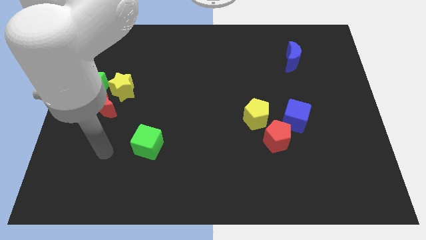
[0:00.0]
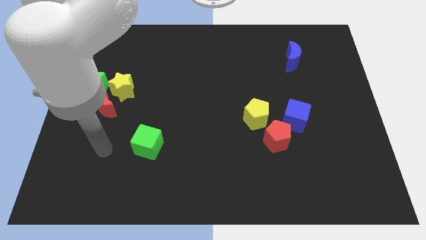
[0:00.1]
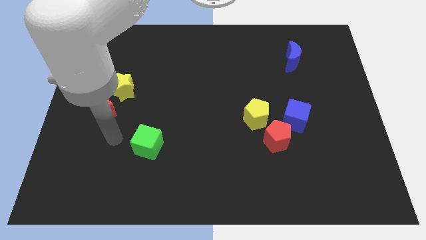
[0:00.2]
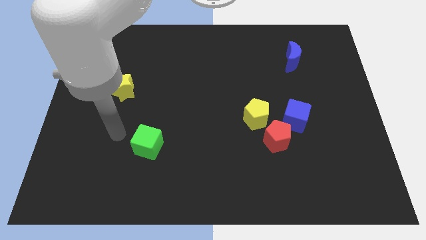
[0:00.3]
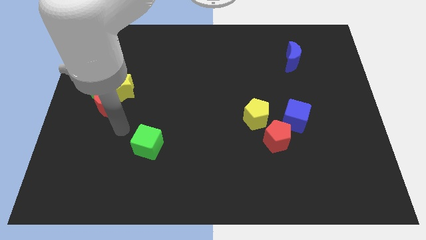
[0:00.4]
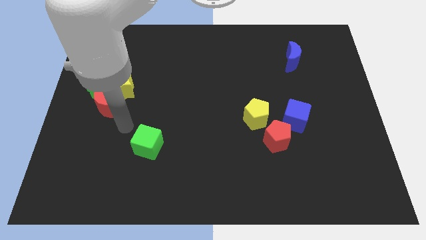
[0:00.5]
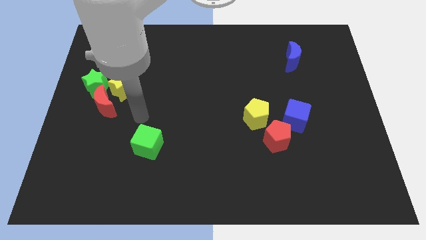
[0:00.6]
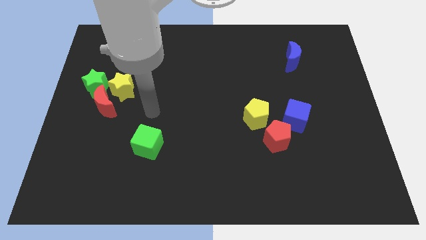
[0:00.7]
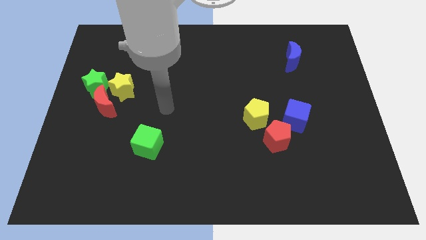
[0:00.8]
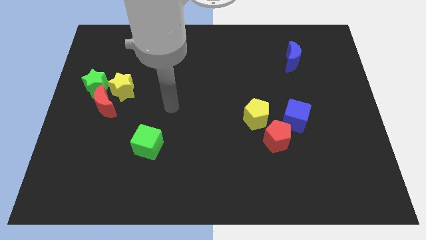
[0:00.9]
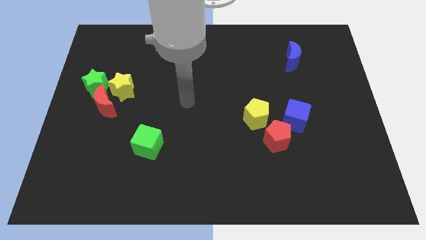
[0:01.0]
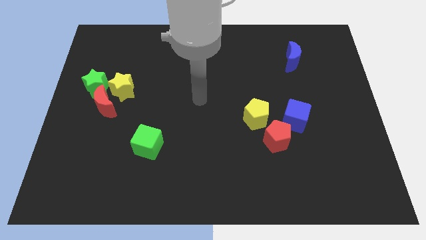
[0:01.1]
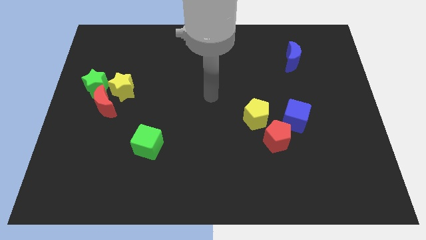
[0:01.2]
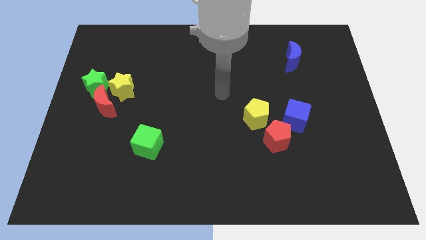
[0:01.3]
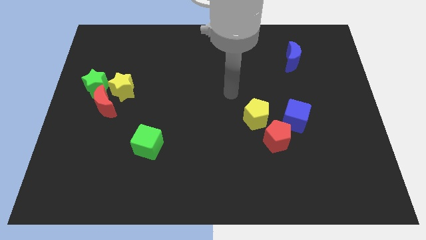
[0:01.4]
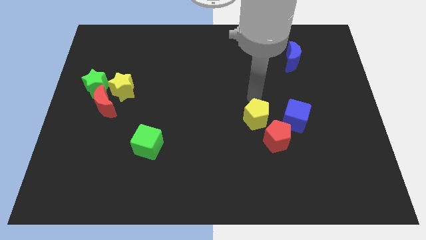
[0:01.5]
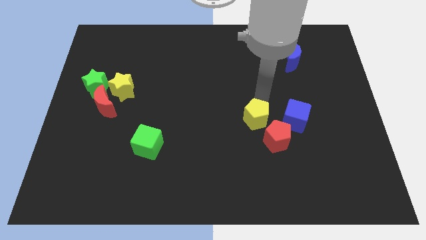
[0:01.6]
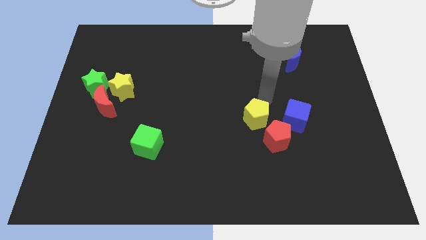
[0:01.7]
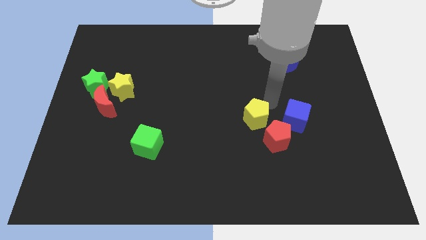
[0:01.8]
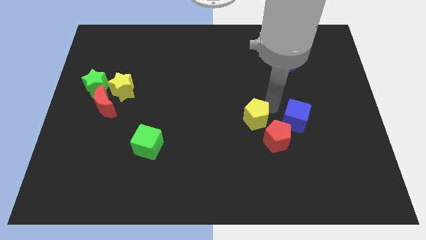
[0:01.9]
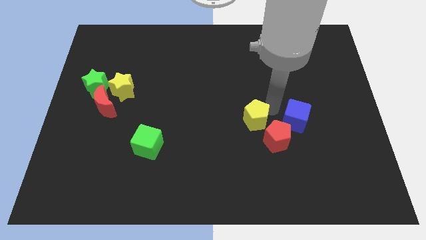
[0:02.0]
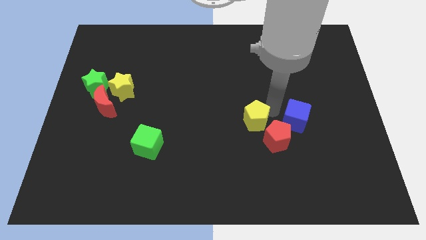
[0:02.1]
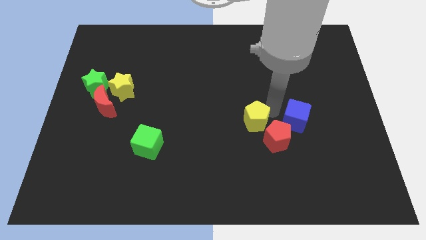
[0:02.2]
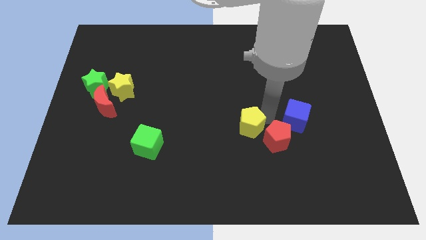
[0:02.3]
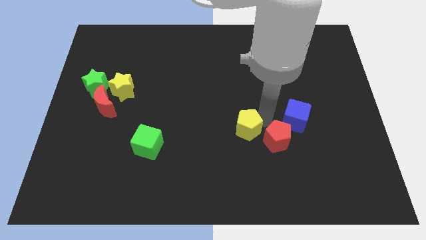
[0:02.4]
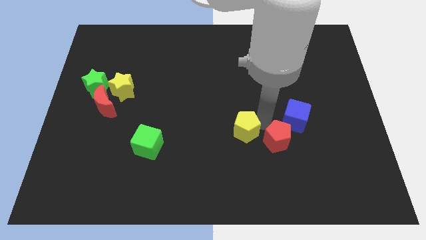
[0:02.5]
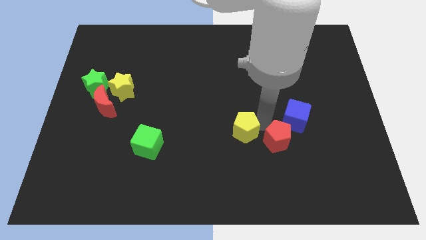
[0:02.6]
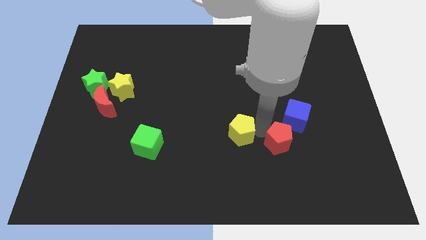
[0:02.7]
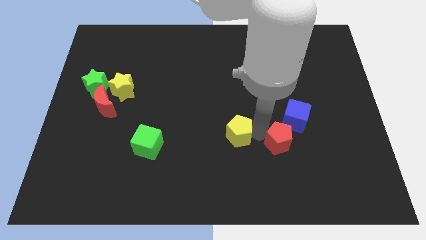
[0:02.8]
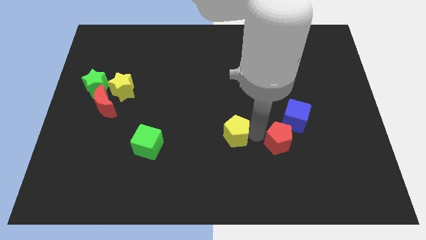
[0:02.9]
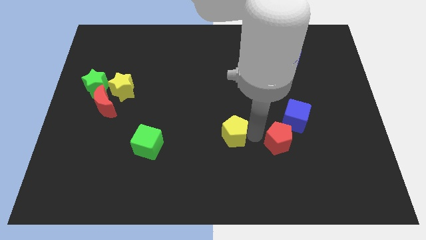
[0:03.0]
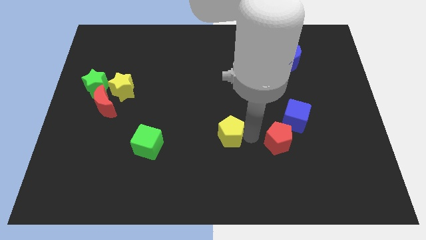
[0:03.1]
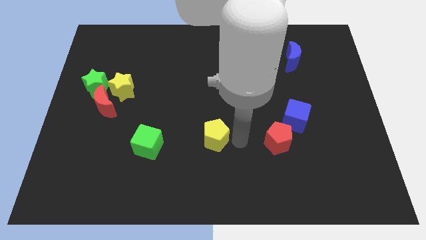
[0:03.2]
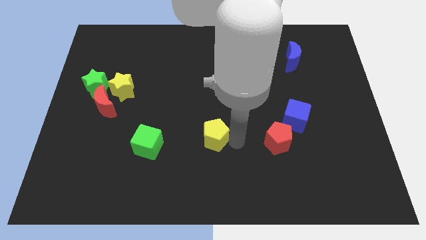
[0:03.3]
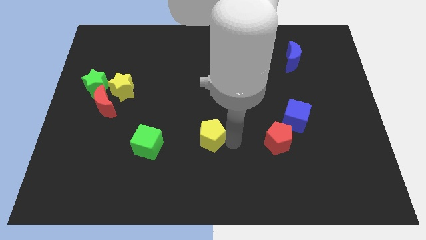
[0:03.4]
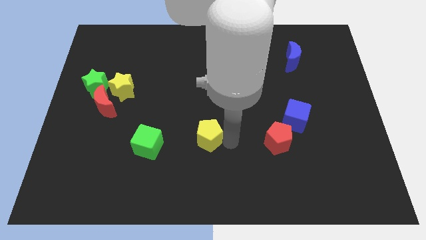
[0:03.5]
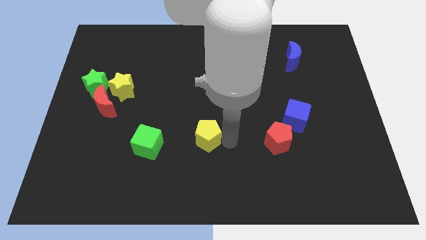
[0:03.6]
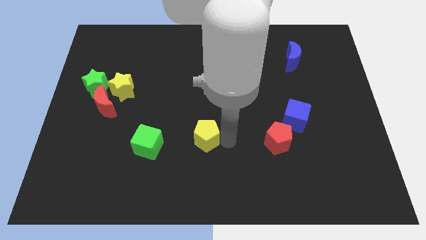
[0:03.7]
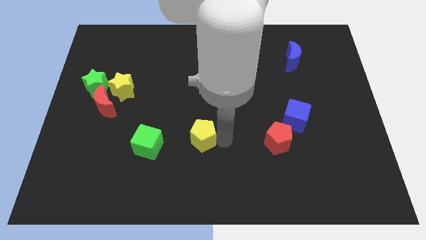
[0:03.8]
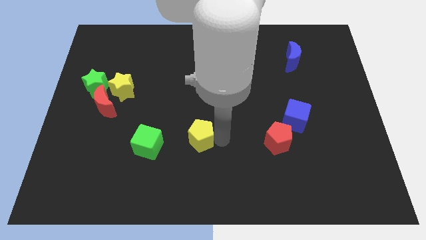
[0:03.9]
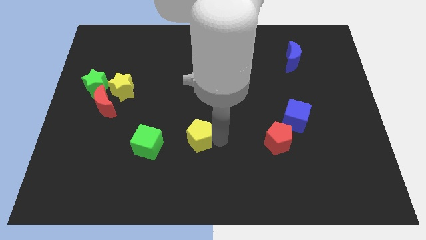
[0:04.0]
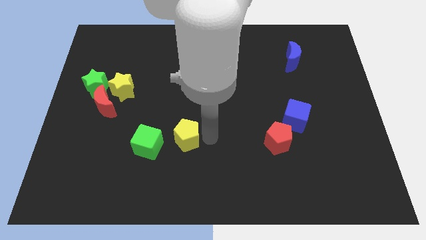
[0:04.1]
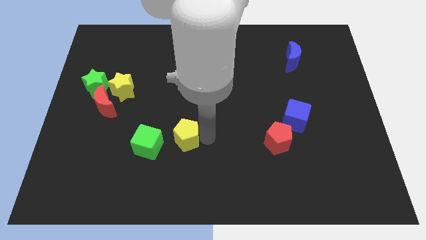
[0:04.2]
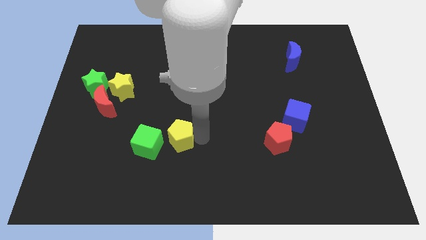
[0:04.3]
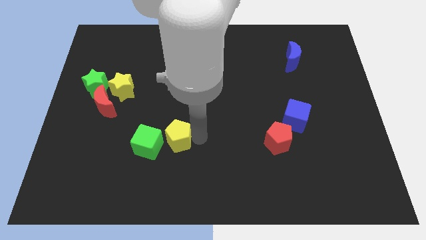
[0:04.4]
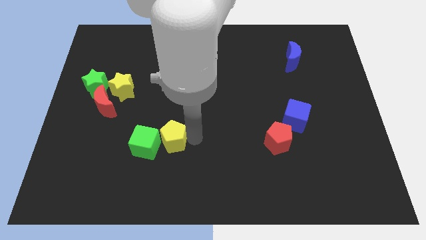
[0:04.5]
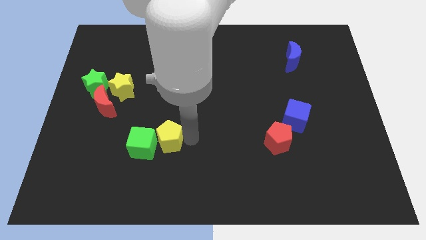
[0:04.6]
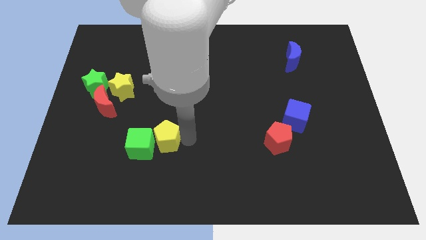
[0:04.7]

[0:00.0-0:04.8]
put the yellow pentagon towards the green cube

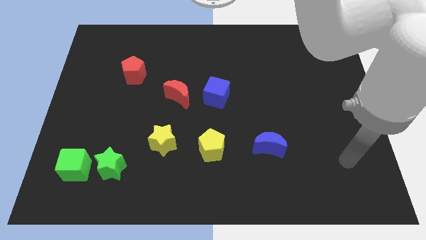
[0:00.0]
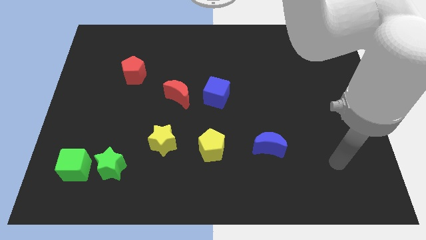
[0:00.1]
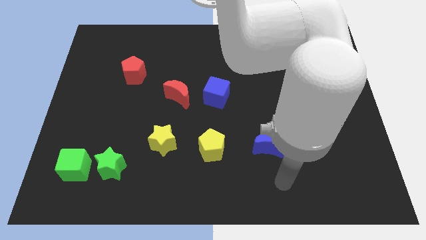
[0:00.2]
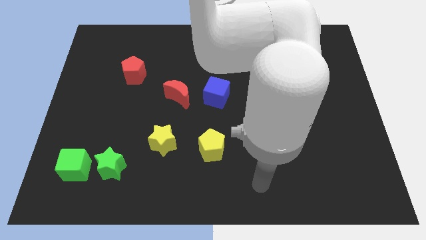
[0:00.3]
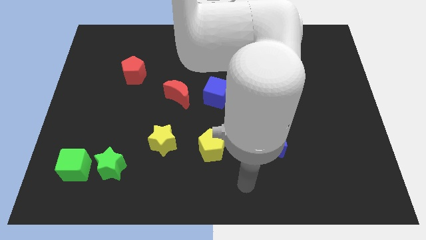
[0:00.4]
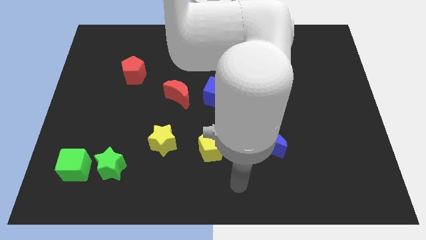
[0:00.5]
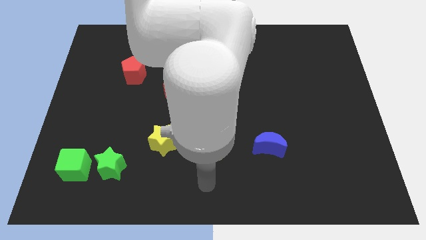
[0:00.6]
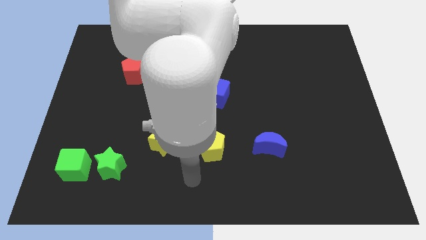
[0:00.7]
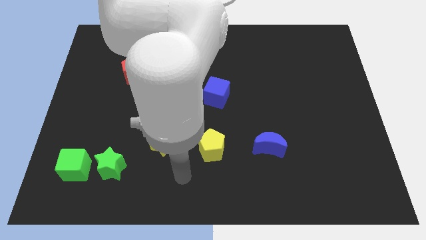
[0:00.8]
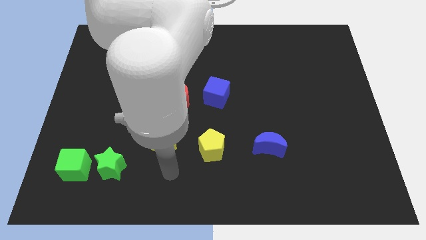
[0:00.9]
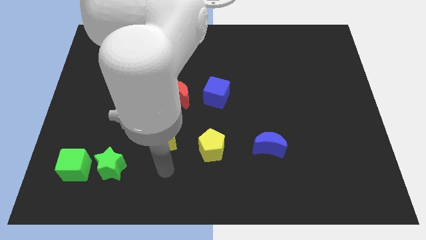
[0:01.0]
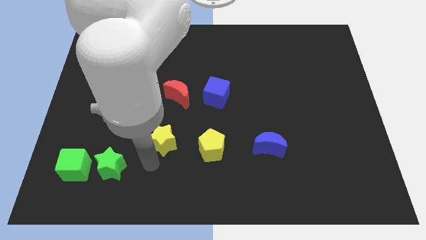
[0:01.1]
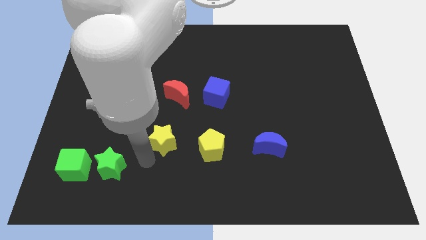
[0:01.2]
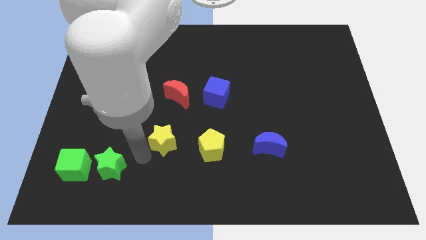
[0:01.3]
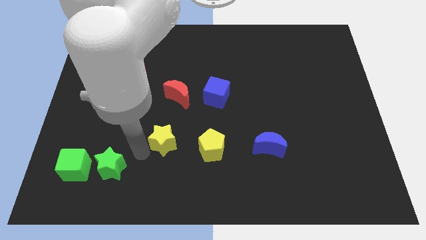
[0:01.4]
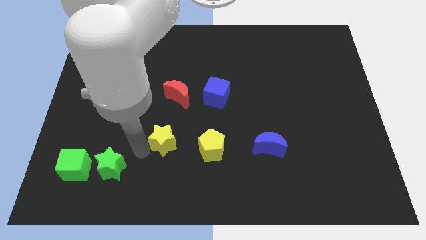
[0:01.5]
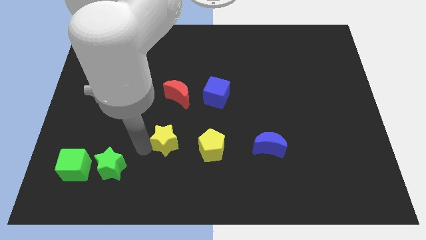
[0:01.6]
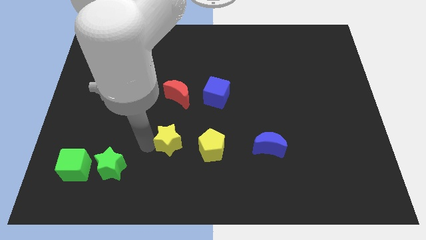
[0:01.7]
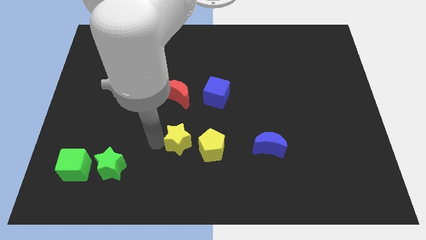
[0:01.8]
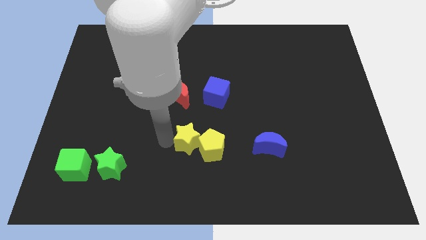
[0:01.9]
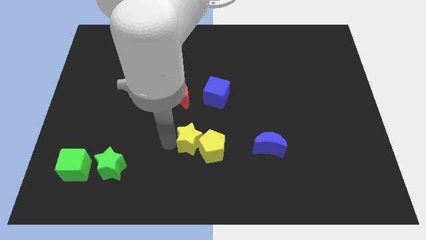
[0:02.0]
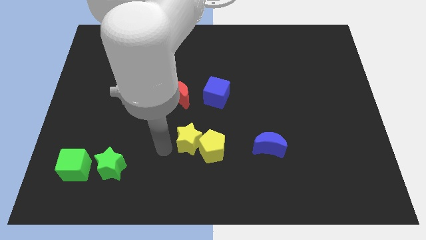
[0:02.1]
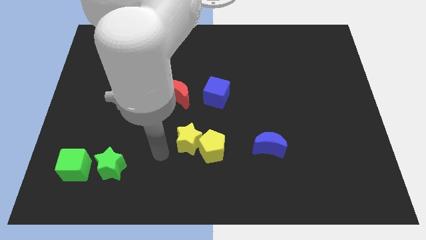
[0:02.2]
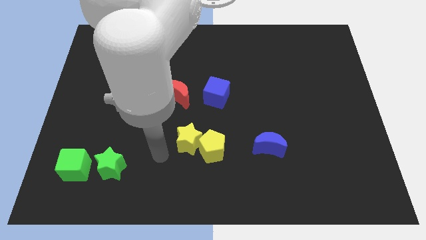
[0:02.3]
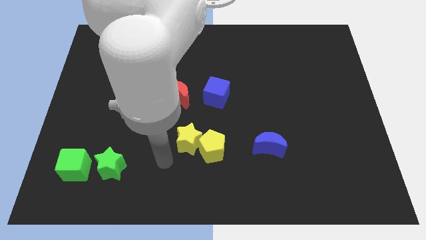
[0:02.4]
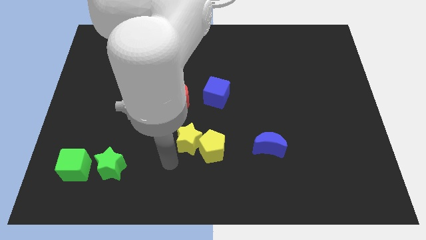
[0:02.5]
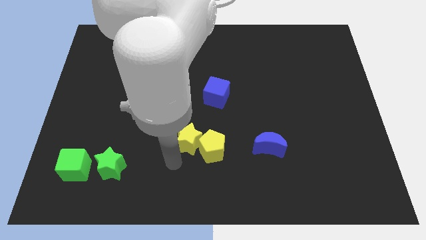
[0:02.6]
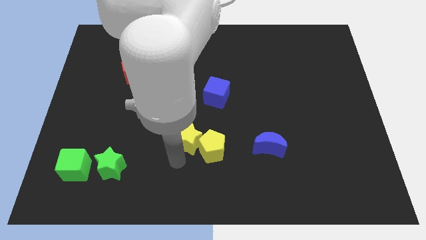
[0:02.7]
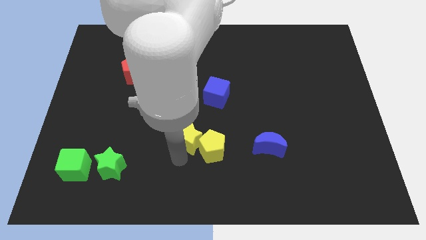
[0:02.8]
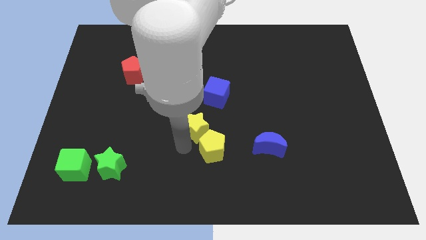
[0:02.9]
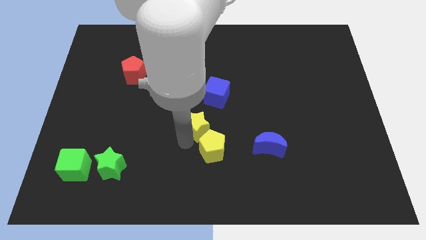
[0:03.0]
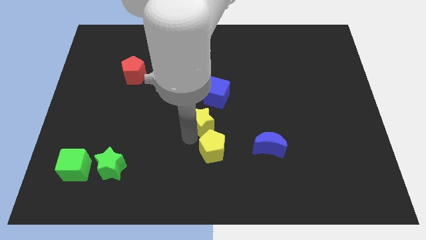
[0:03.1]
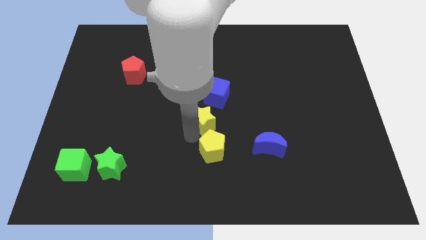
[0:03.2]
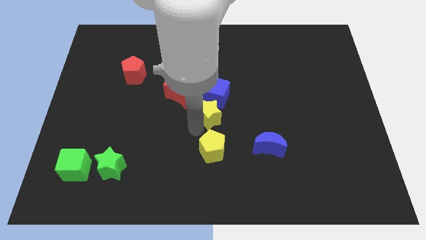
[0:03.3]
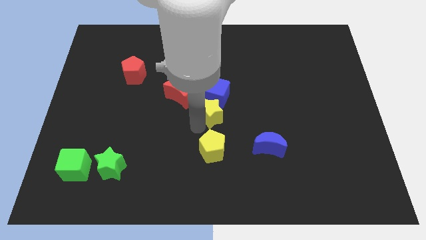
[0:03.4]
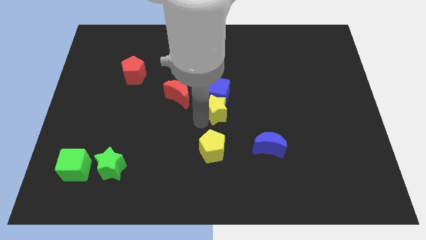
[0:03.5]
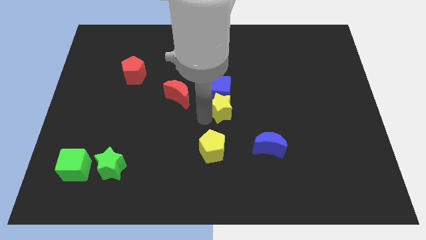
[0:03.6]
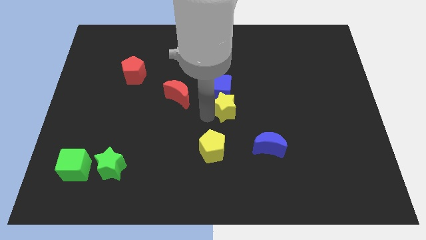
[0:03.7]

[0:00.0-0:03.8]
slide the yellow star next to the blue cube
